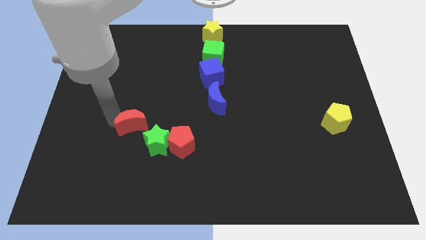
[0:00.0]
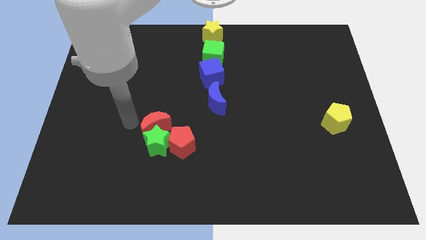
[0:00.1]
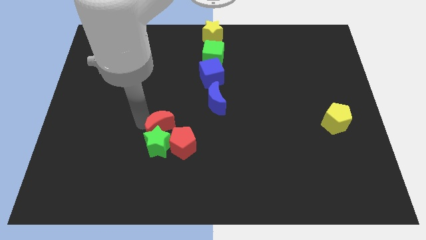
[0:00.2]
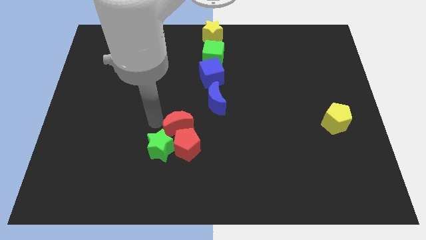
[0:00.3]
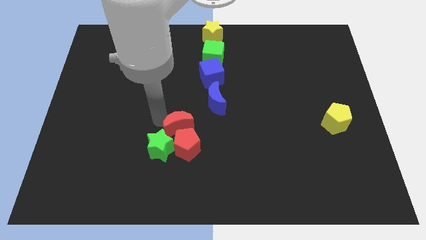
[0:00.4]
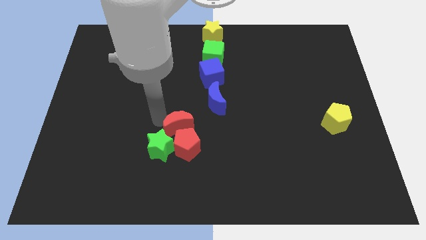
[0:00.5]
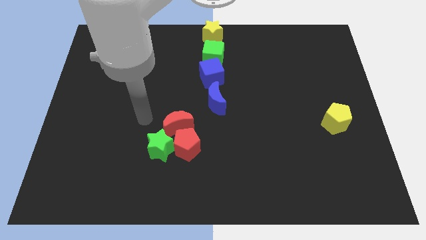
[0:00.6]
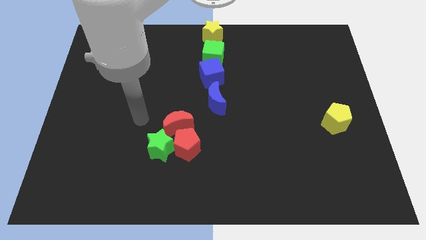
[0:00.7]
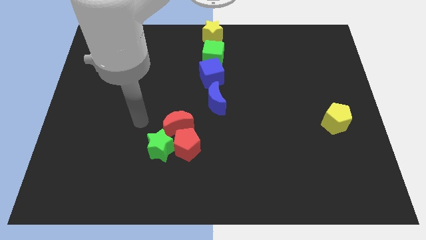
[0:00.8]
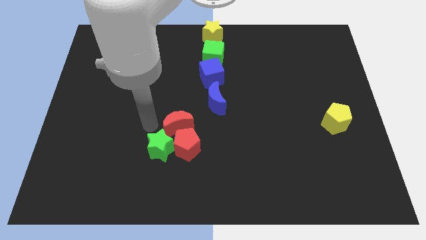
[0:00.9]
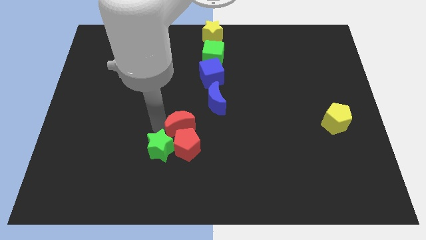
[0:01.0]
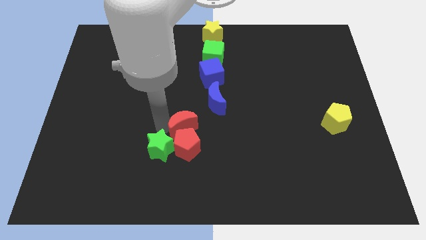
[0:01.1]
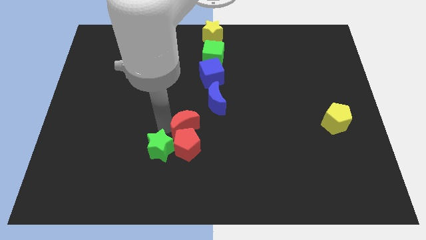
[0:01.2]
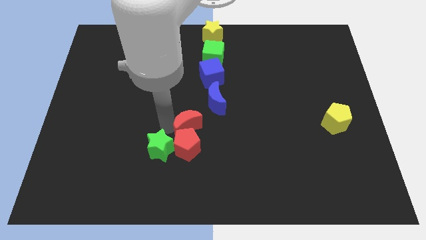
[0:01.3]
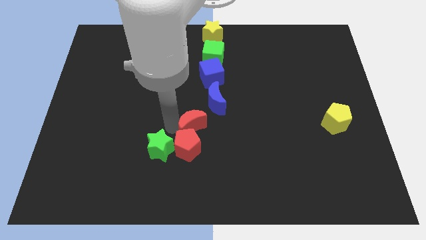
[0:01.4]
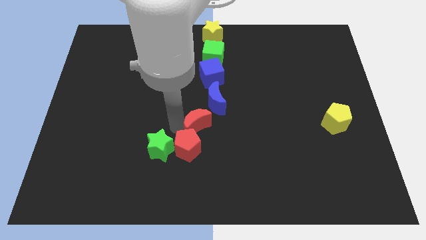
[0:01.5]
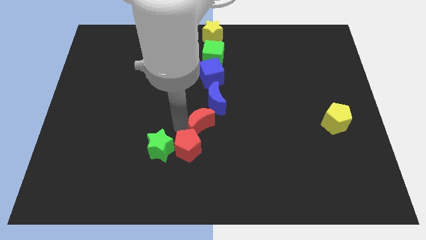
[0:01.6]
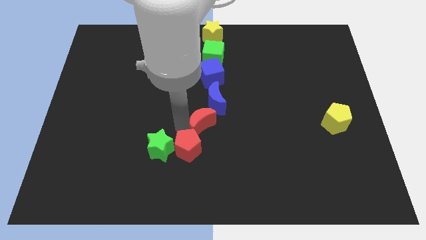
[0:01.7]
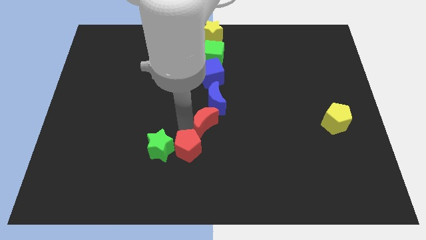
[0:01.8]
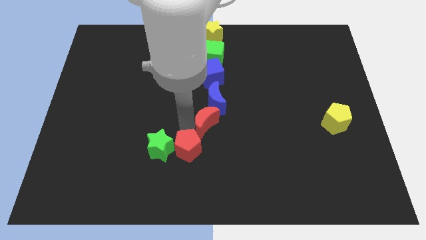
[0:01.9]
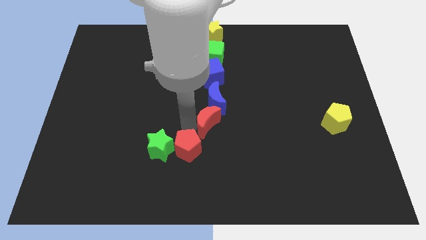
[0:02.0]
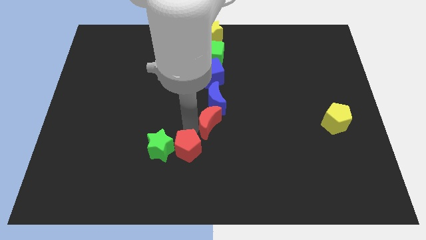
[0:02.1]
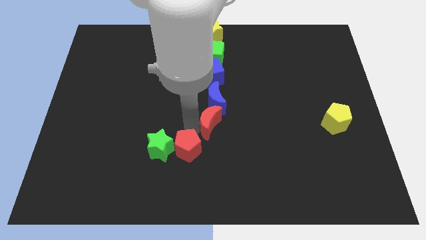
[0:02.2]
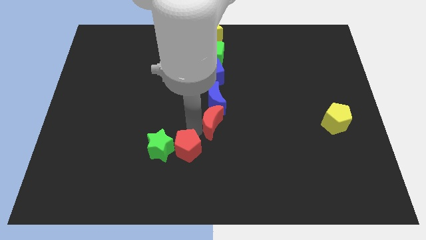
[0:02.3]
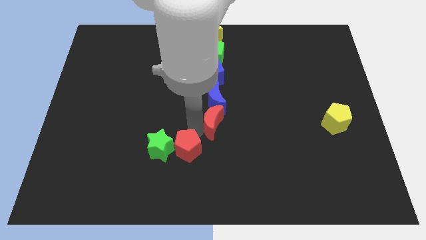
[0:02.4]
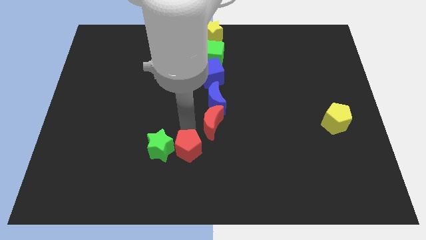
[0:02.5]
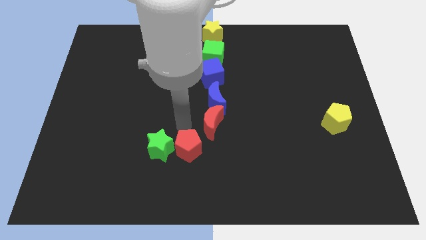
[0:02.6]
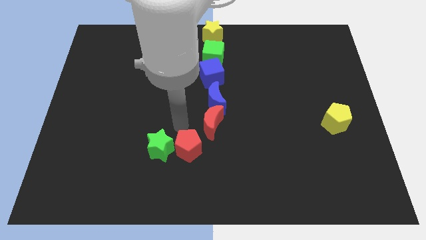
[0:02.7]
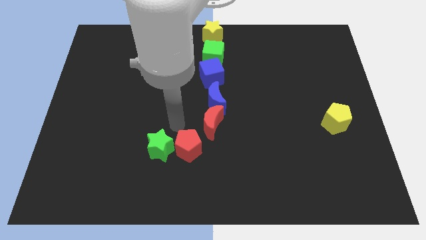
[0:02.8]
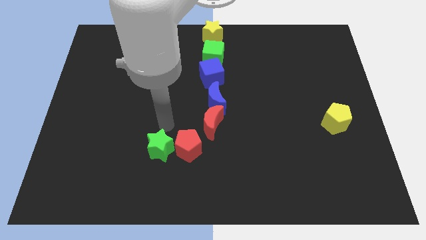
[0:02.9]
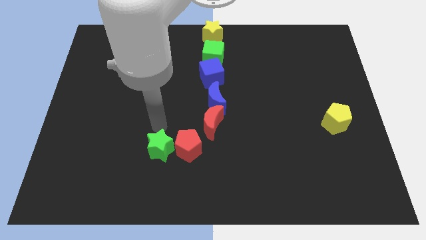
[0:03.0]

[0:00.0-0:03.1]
place red moon bellow blue moon

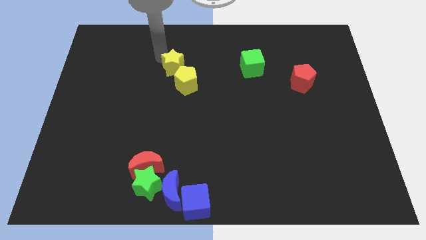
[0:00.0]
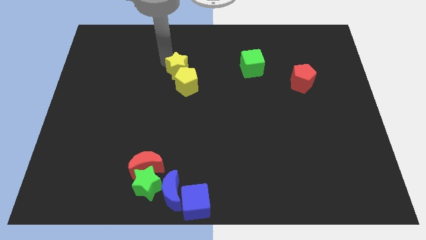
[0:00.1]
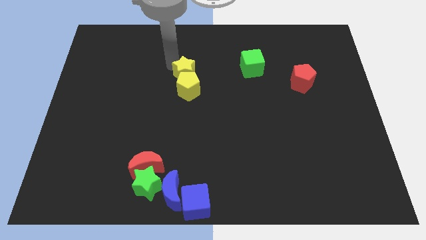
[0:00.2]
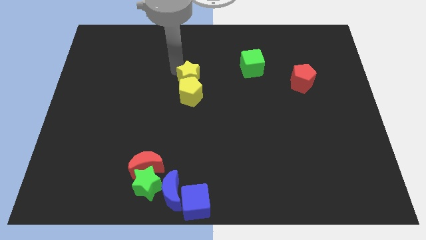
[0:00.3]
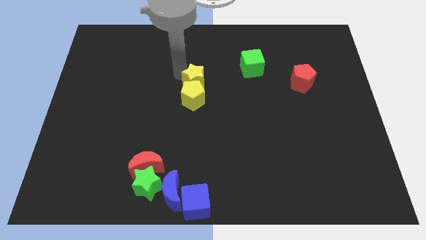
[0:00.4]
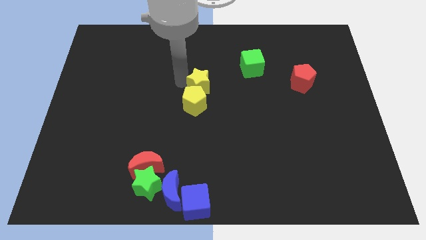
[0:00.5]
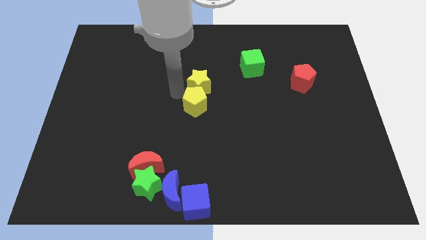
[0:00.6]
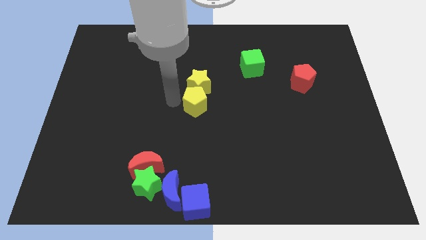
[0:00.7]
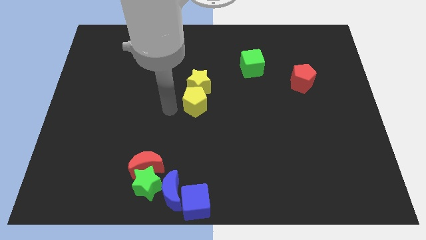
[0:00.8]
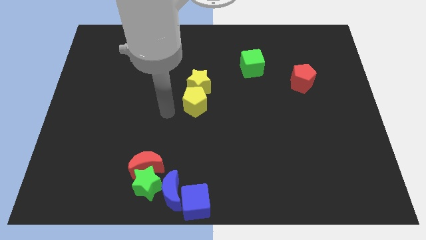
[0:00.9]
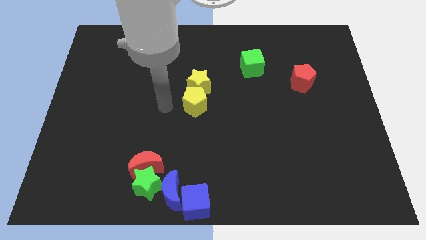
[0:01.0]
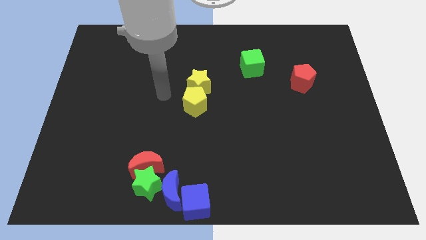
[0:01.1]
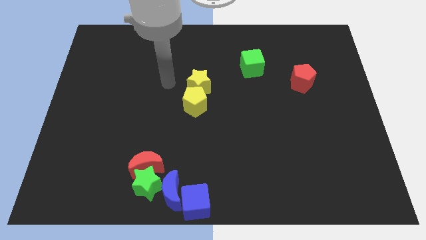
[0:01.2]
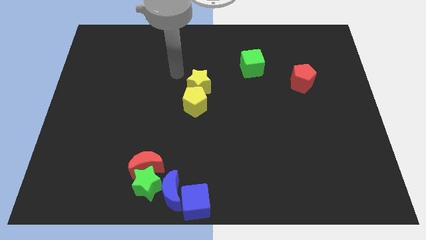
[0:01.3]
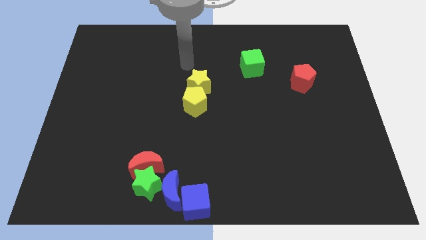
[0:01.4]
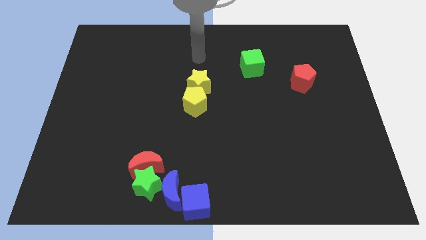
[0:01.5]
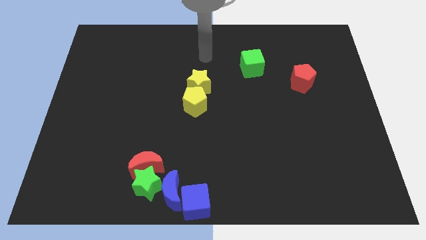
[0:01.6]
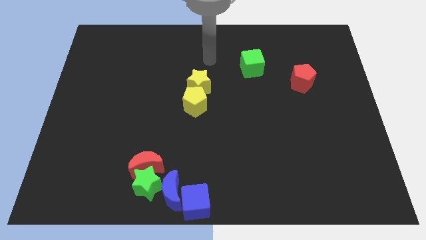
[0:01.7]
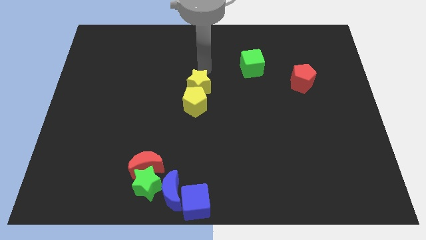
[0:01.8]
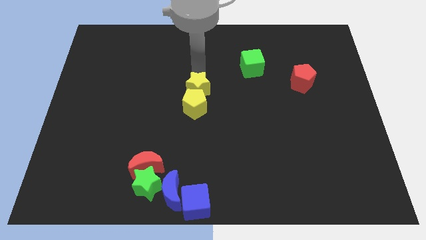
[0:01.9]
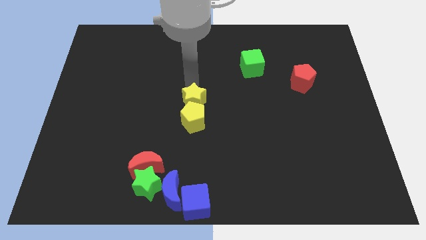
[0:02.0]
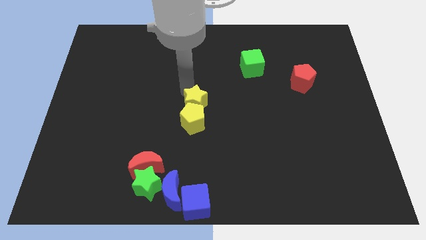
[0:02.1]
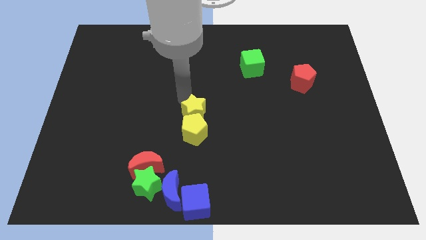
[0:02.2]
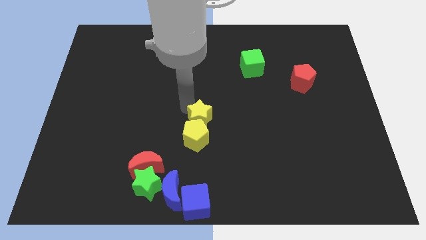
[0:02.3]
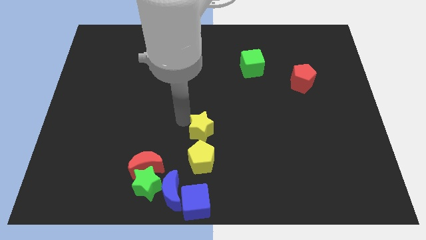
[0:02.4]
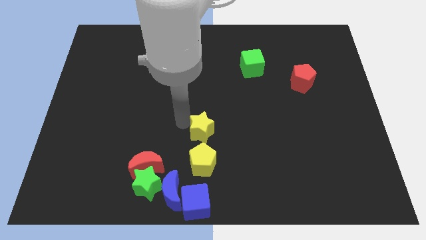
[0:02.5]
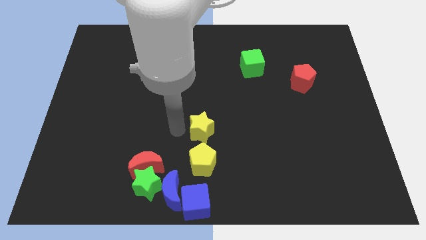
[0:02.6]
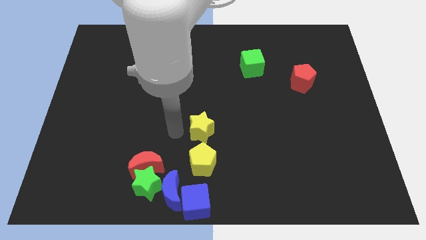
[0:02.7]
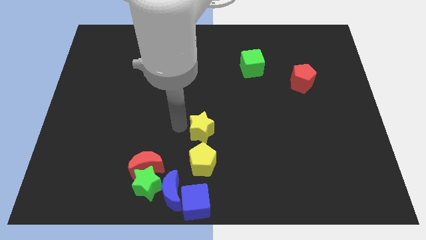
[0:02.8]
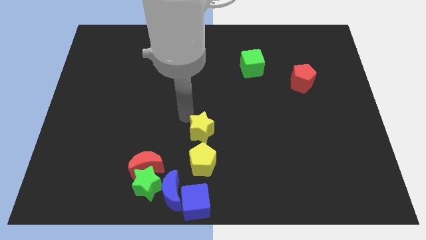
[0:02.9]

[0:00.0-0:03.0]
push the yellow star slightly down

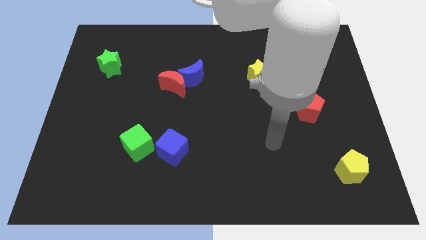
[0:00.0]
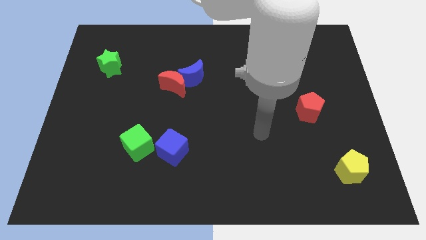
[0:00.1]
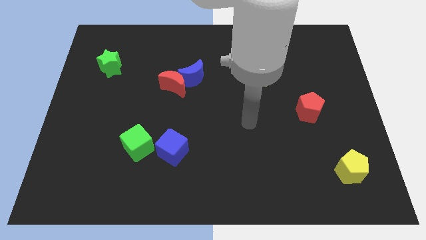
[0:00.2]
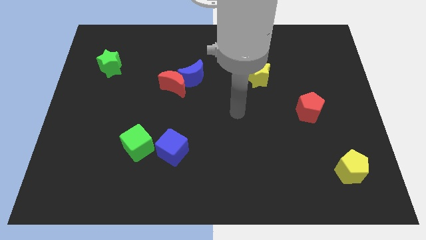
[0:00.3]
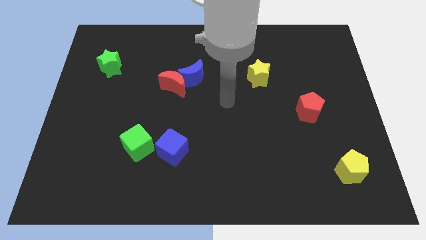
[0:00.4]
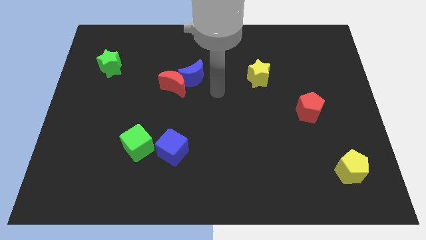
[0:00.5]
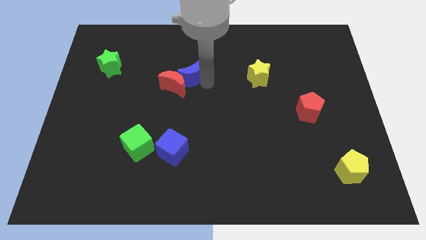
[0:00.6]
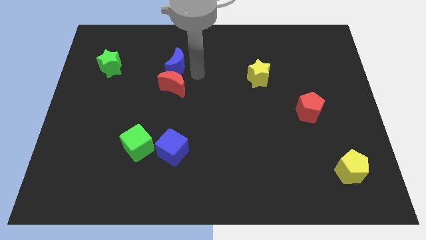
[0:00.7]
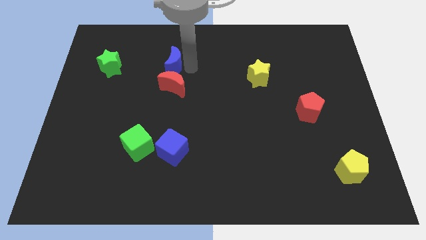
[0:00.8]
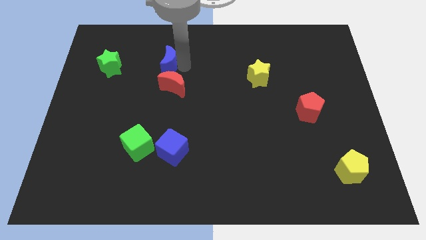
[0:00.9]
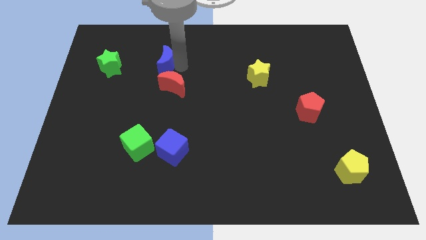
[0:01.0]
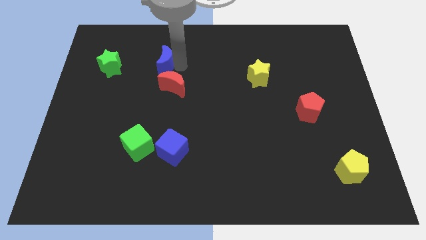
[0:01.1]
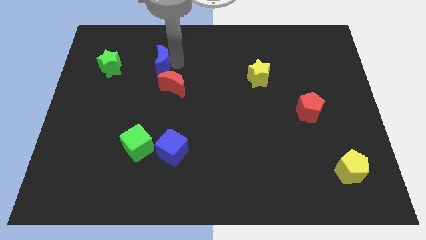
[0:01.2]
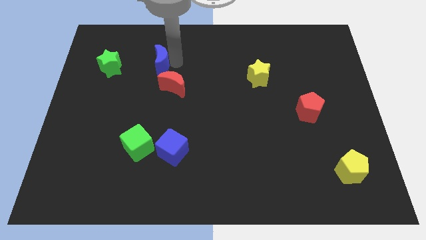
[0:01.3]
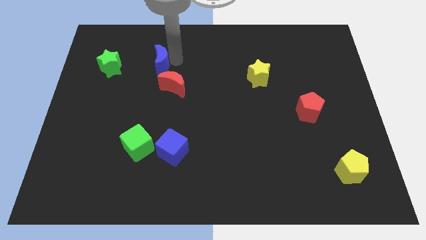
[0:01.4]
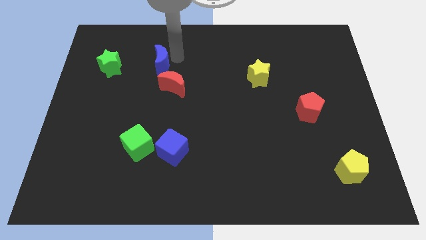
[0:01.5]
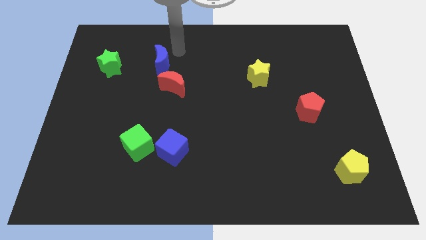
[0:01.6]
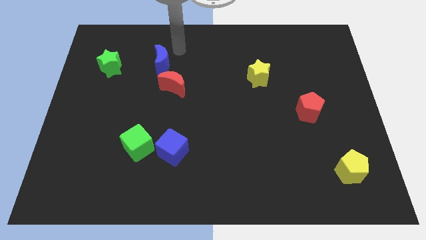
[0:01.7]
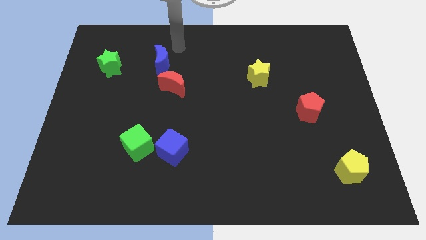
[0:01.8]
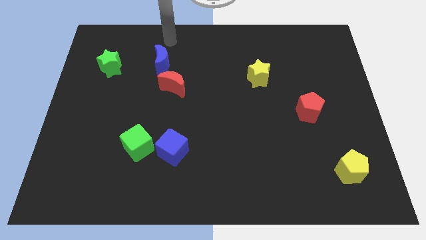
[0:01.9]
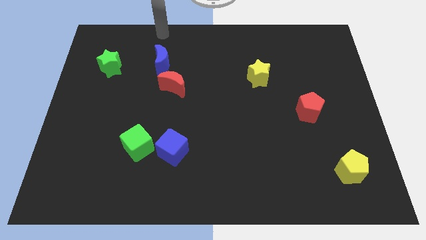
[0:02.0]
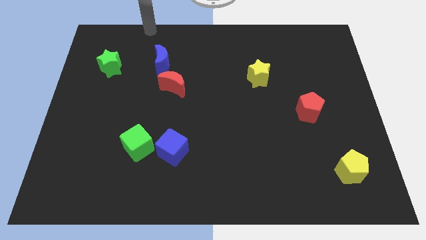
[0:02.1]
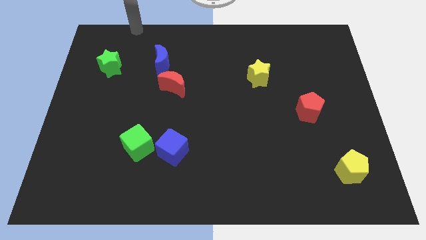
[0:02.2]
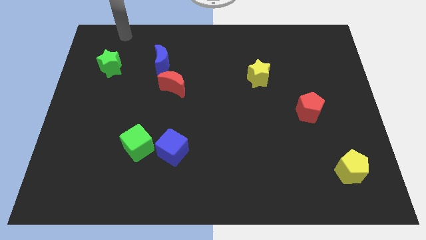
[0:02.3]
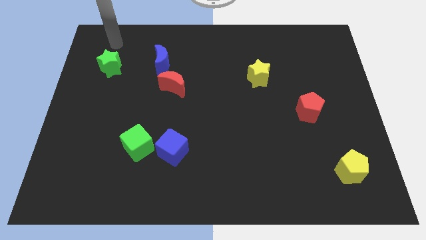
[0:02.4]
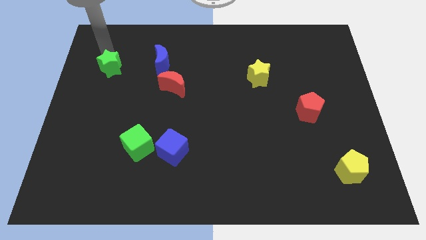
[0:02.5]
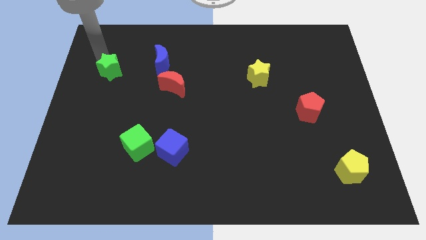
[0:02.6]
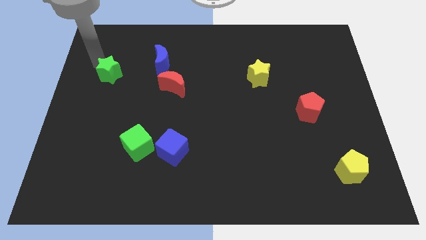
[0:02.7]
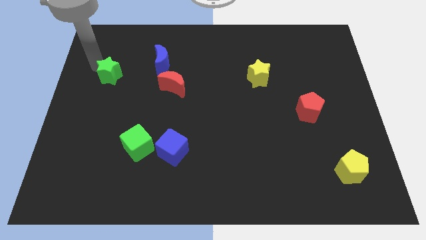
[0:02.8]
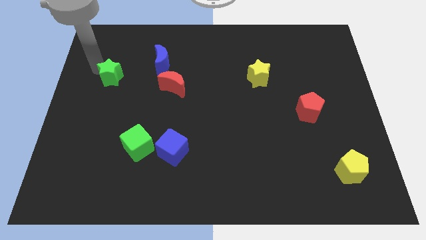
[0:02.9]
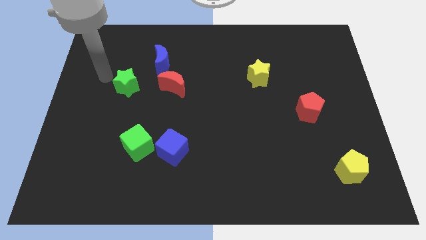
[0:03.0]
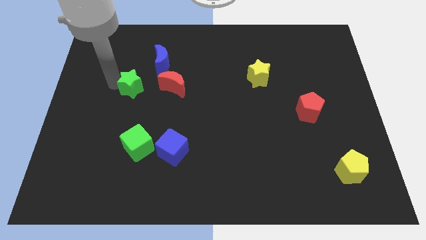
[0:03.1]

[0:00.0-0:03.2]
place the green star left to the red moon
